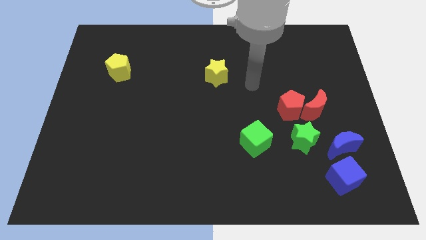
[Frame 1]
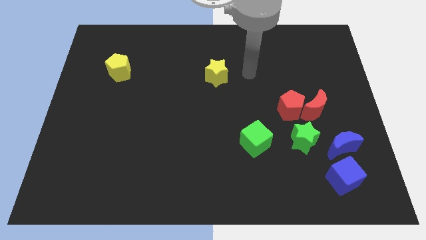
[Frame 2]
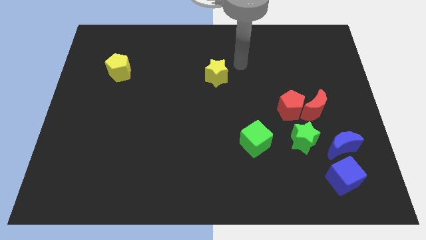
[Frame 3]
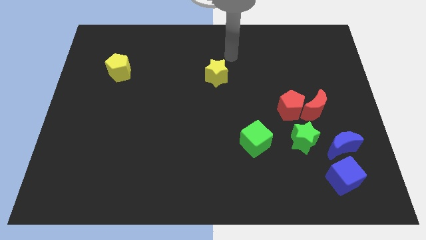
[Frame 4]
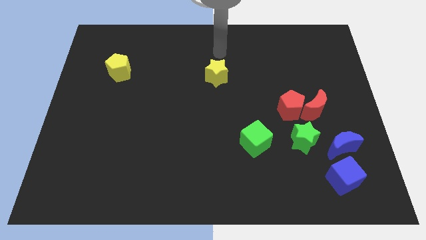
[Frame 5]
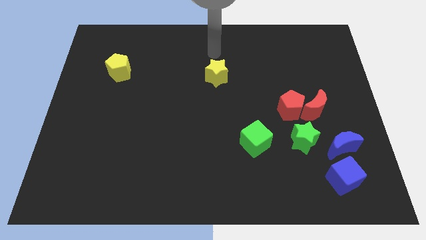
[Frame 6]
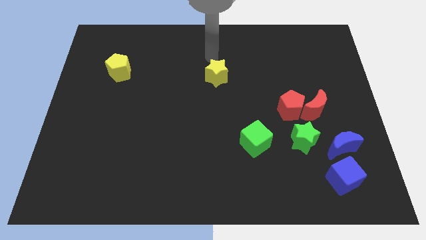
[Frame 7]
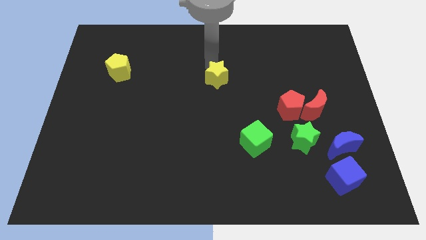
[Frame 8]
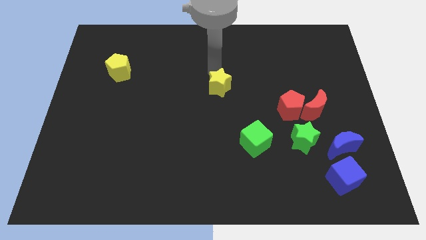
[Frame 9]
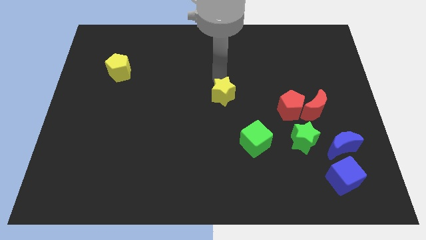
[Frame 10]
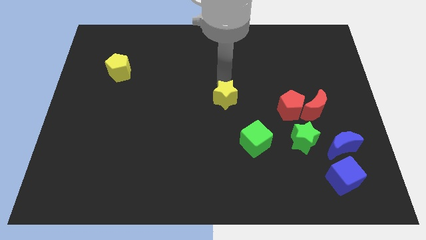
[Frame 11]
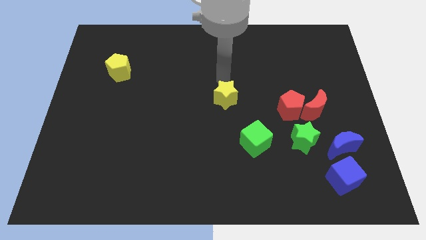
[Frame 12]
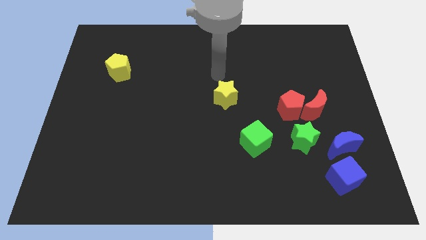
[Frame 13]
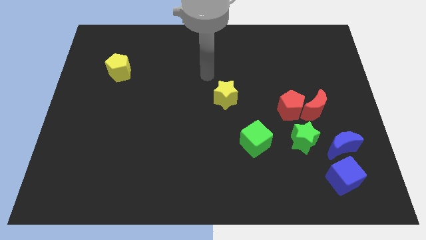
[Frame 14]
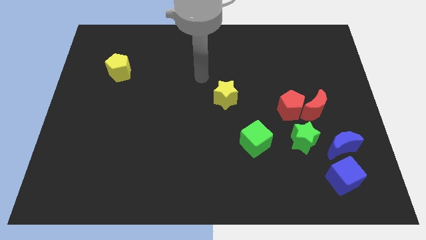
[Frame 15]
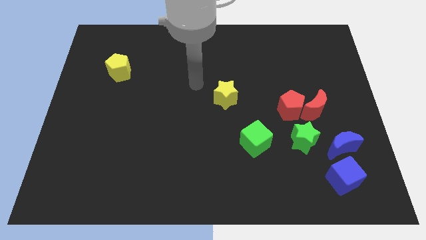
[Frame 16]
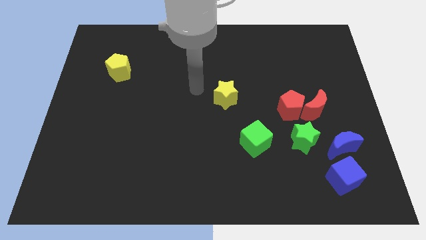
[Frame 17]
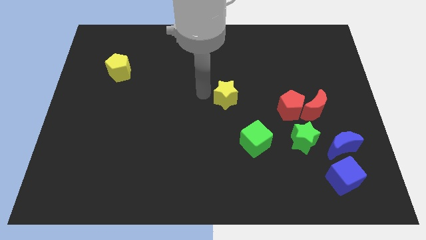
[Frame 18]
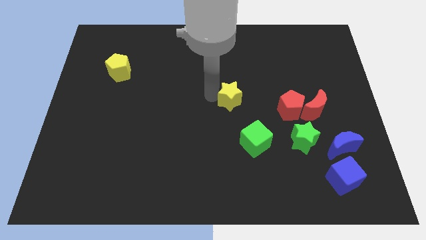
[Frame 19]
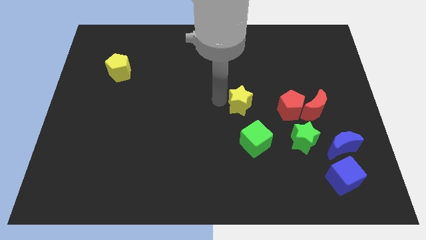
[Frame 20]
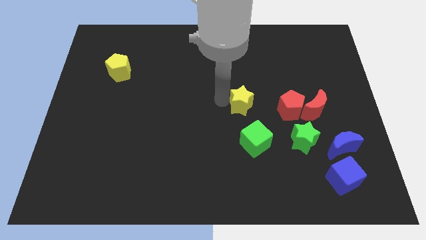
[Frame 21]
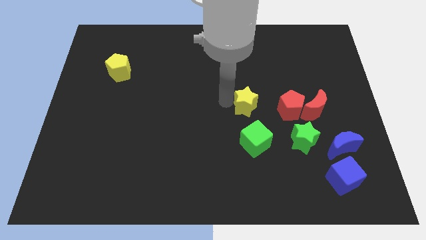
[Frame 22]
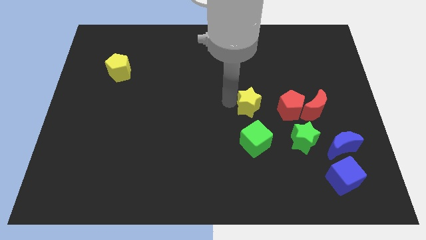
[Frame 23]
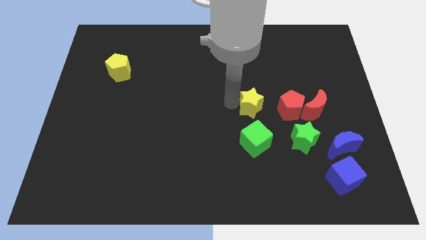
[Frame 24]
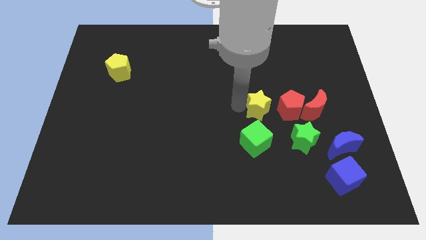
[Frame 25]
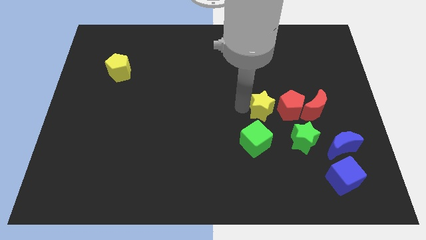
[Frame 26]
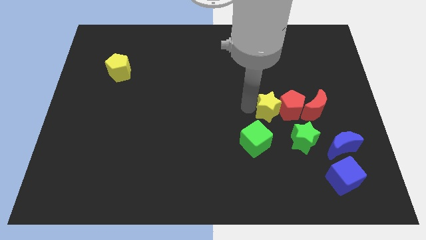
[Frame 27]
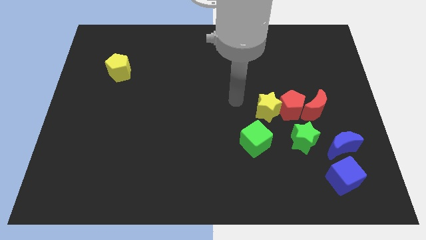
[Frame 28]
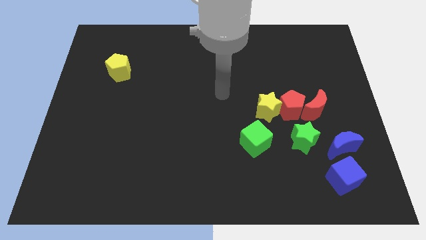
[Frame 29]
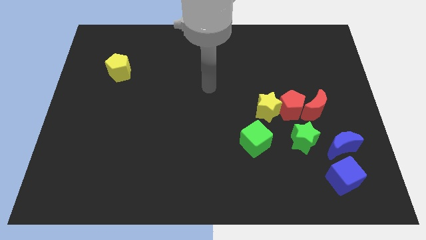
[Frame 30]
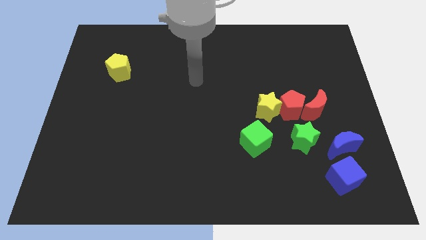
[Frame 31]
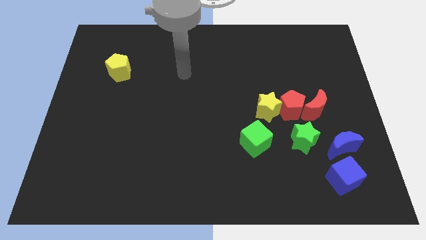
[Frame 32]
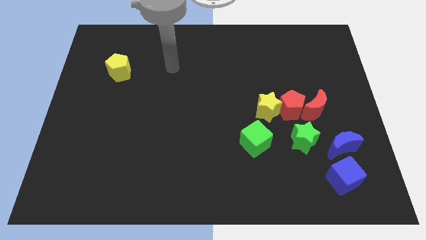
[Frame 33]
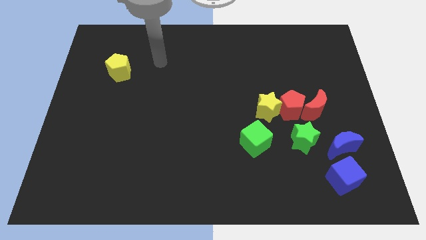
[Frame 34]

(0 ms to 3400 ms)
place the yellow star left to the red pentagon

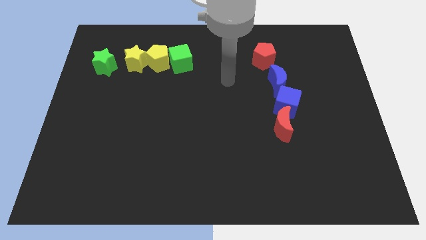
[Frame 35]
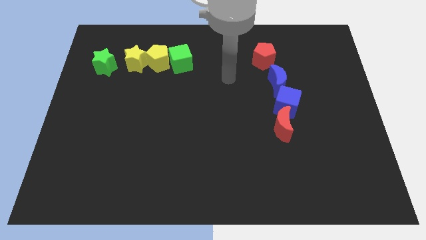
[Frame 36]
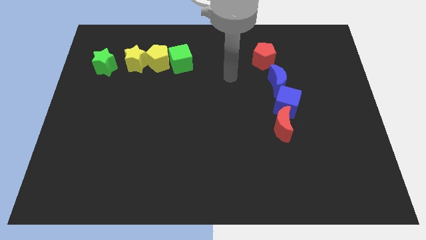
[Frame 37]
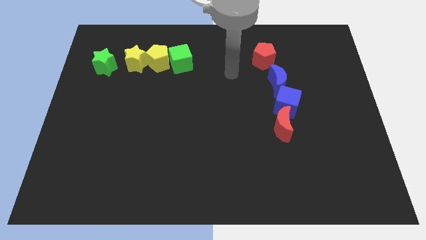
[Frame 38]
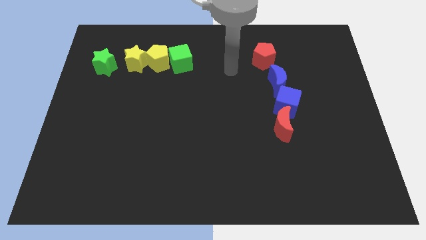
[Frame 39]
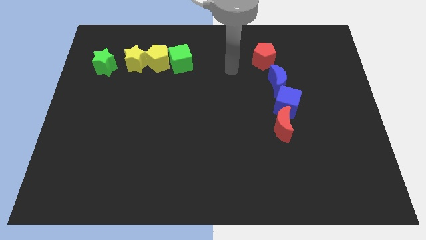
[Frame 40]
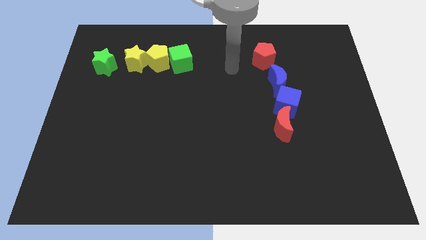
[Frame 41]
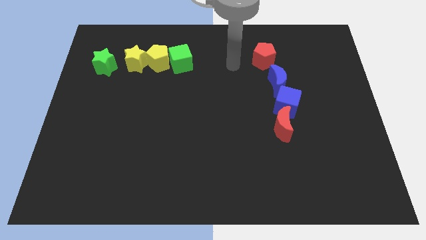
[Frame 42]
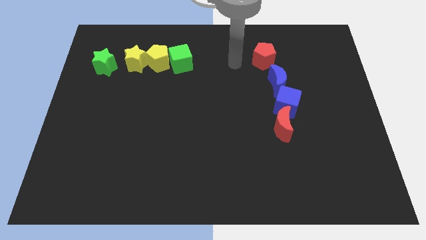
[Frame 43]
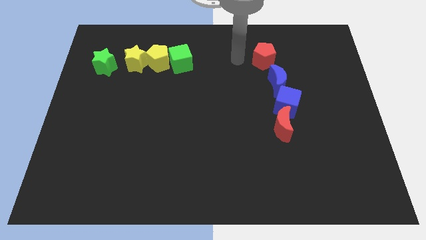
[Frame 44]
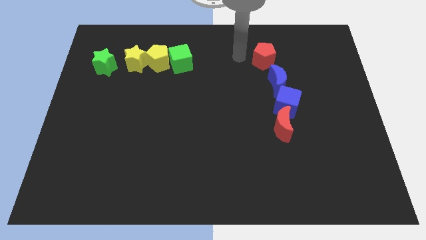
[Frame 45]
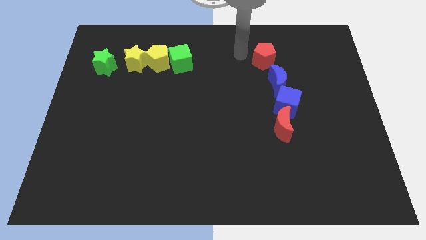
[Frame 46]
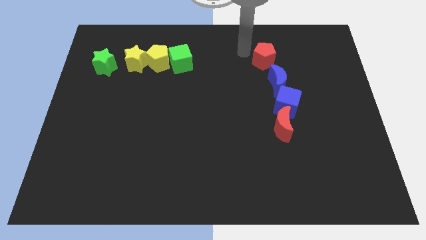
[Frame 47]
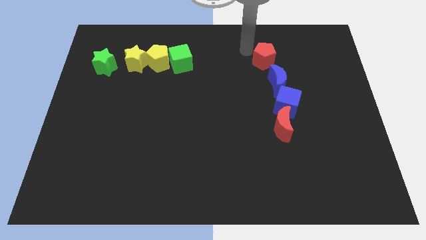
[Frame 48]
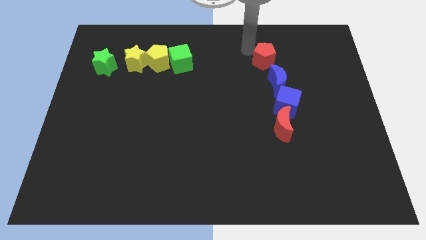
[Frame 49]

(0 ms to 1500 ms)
touch the red pentagon

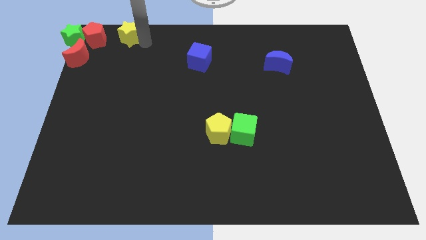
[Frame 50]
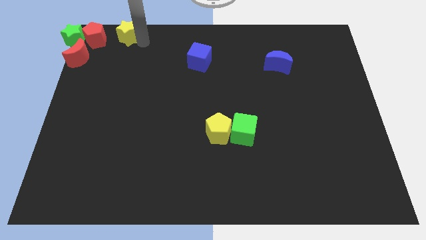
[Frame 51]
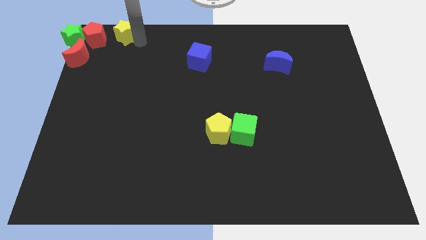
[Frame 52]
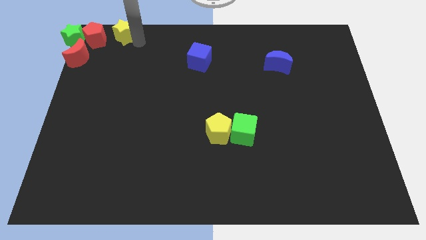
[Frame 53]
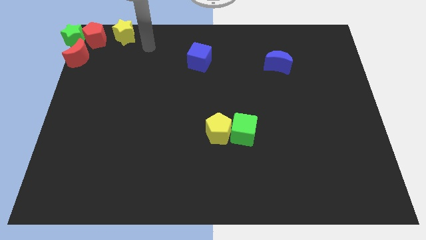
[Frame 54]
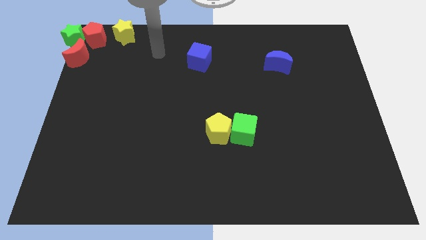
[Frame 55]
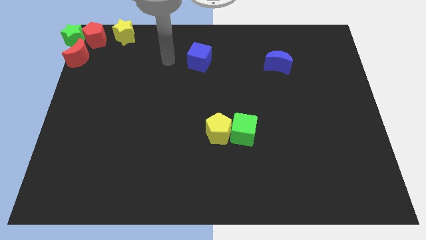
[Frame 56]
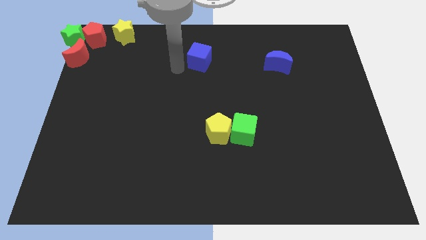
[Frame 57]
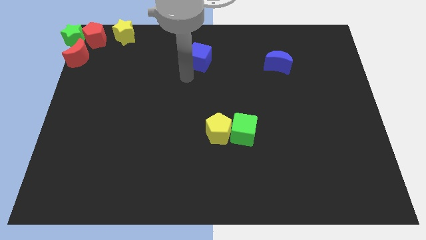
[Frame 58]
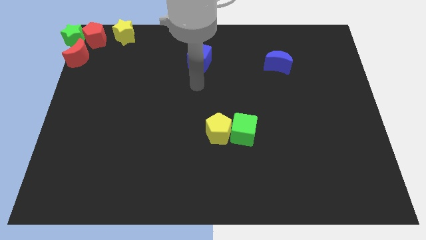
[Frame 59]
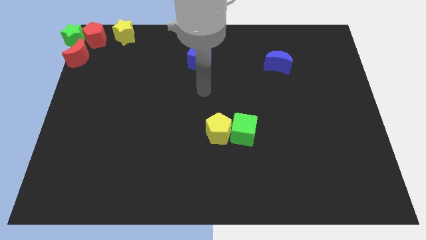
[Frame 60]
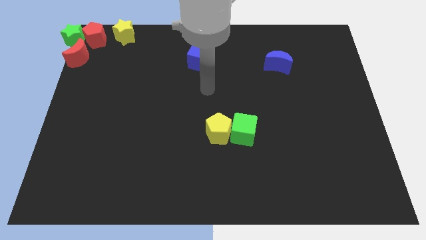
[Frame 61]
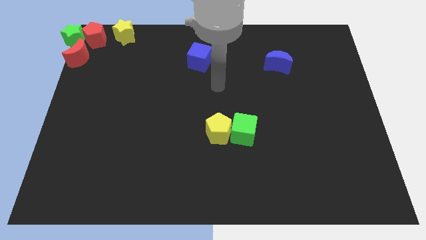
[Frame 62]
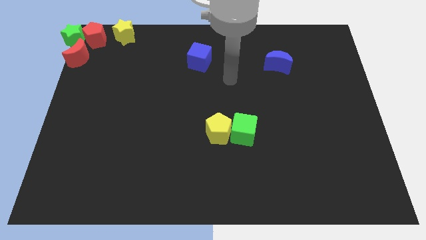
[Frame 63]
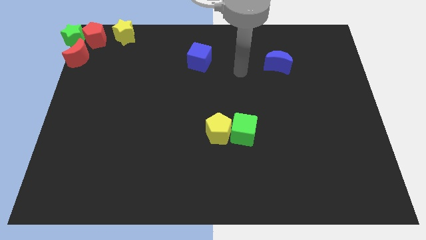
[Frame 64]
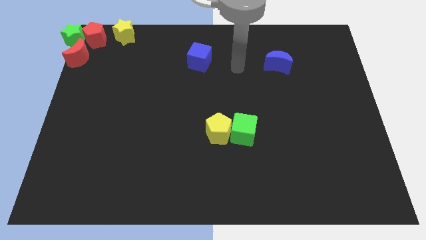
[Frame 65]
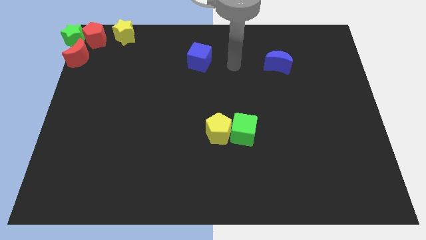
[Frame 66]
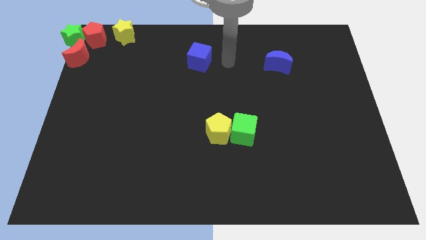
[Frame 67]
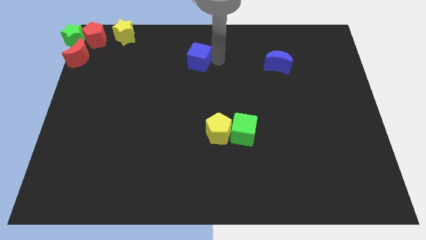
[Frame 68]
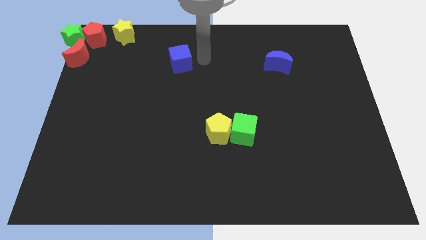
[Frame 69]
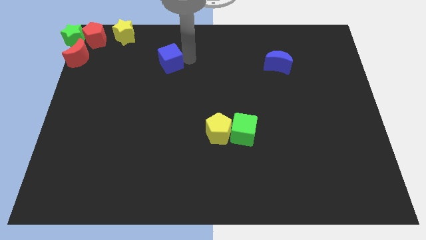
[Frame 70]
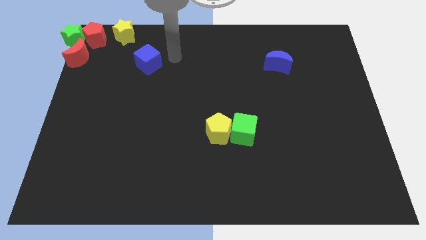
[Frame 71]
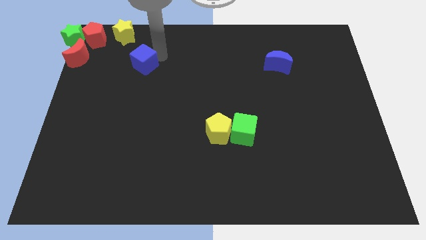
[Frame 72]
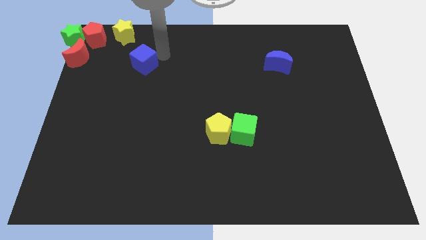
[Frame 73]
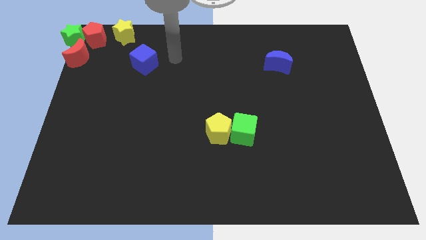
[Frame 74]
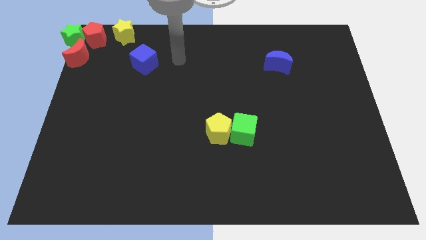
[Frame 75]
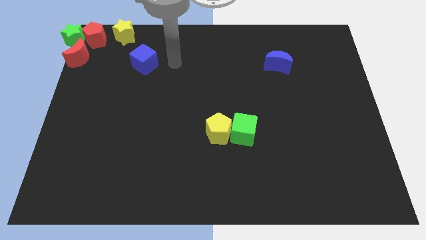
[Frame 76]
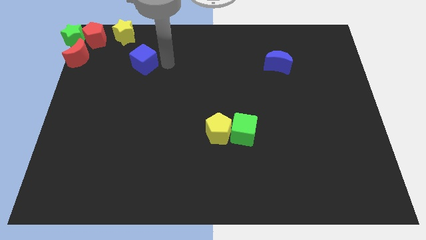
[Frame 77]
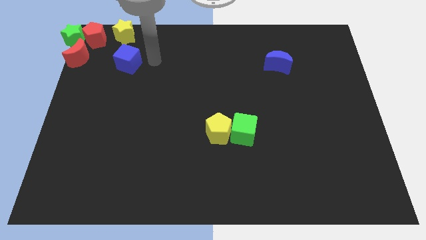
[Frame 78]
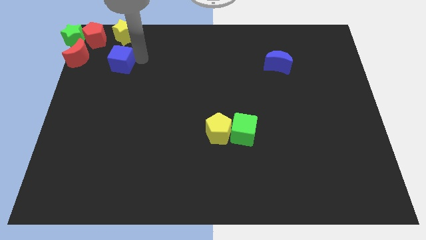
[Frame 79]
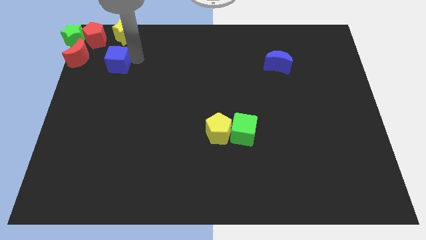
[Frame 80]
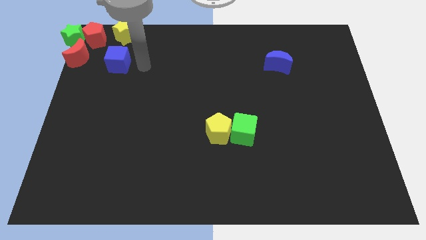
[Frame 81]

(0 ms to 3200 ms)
move the blue cube to the bottom of the yellow star

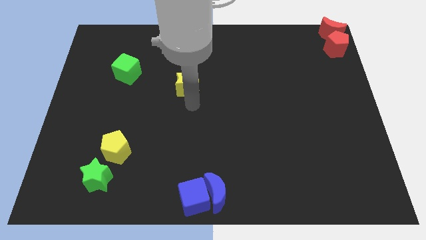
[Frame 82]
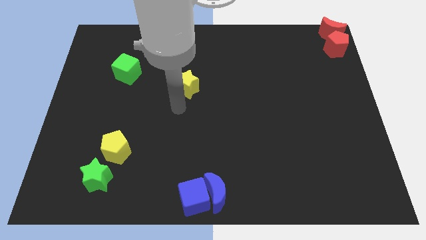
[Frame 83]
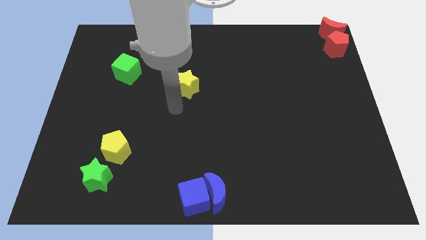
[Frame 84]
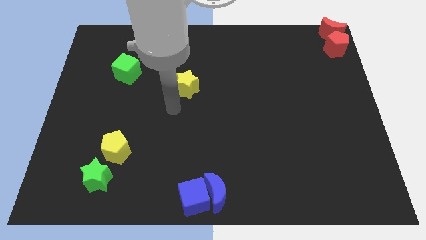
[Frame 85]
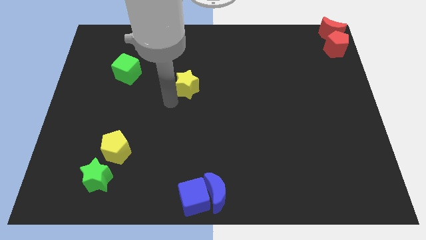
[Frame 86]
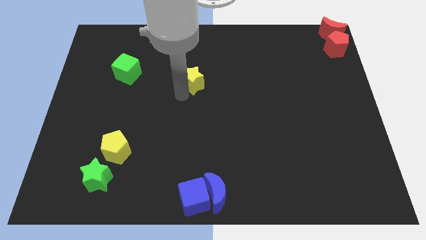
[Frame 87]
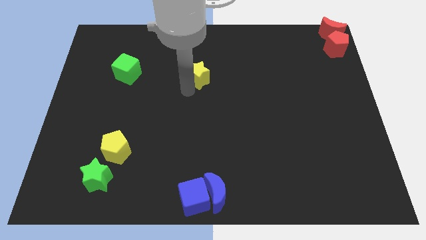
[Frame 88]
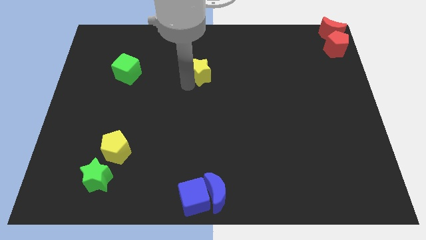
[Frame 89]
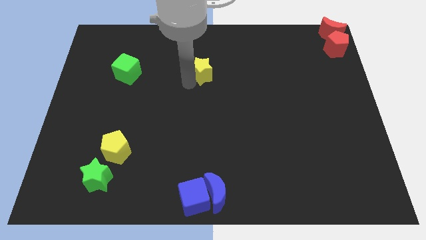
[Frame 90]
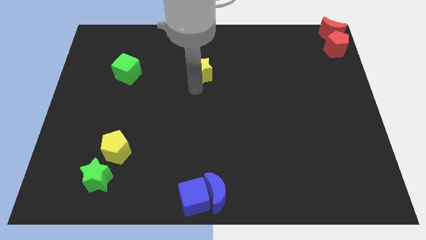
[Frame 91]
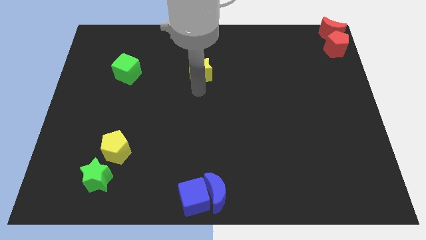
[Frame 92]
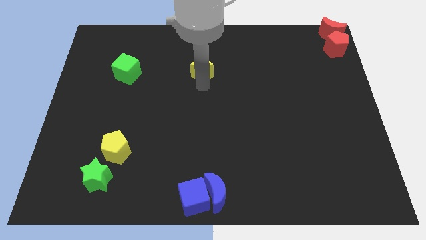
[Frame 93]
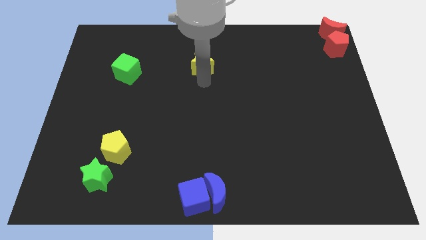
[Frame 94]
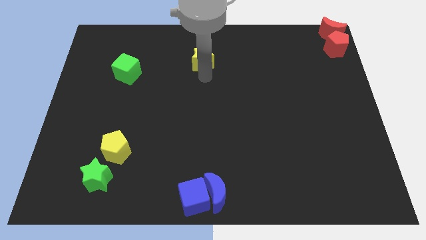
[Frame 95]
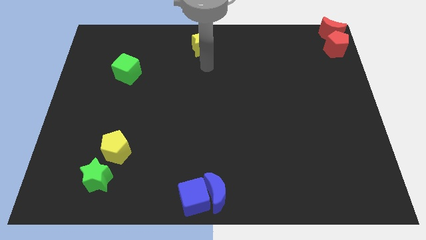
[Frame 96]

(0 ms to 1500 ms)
move yellow star to the top
